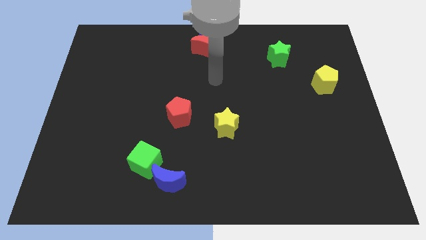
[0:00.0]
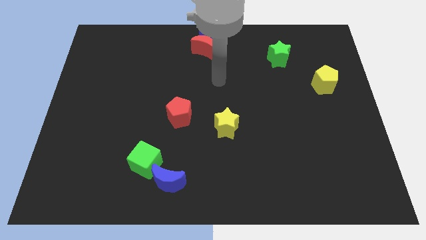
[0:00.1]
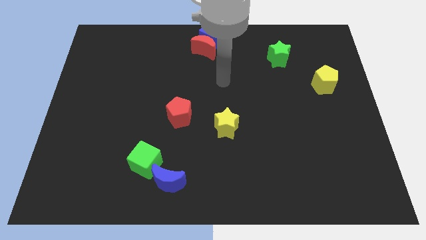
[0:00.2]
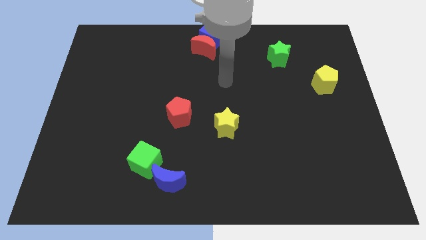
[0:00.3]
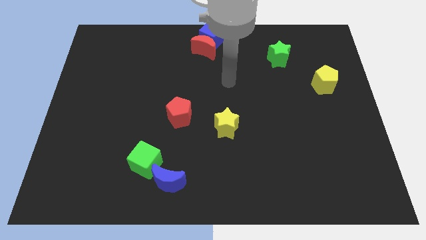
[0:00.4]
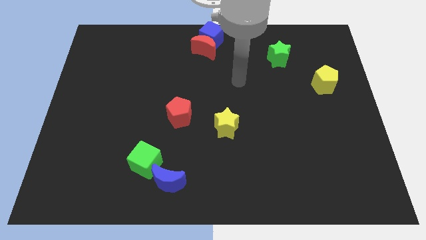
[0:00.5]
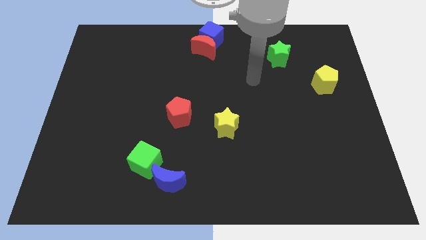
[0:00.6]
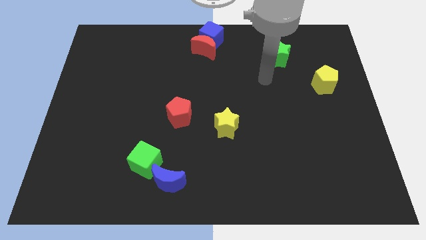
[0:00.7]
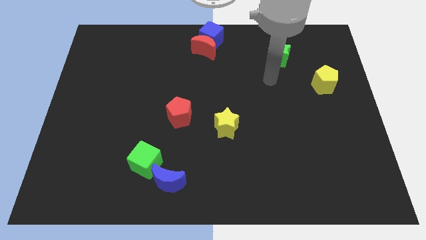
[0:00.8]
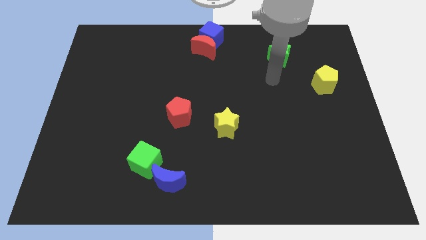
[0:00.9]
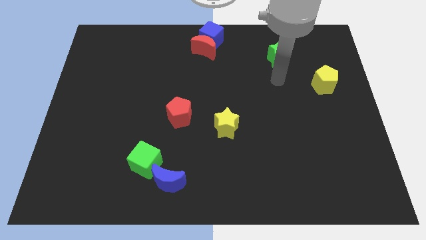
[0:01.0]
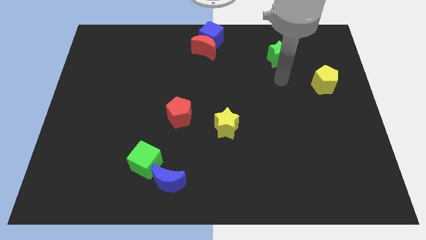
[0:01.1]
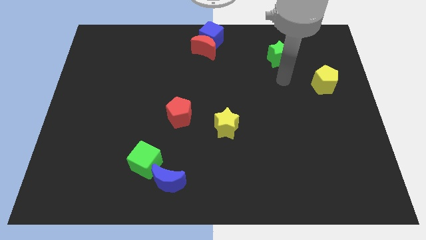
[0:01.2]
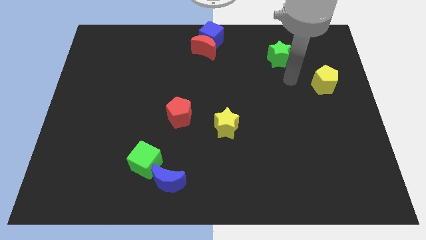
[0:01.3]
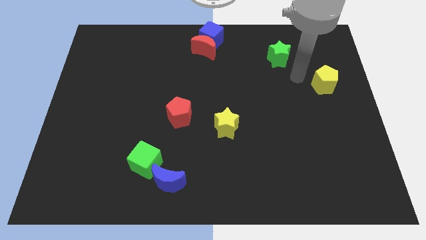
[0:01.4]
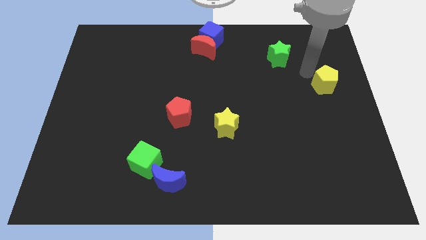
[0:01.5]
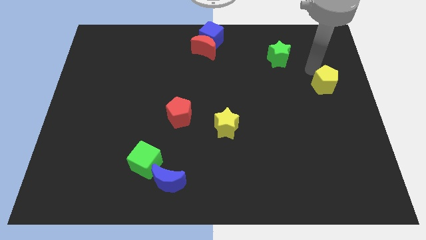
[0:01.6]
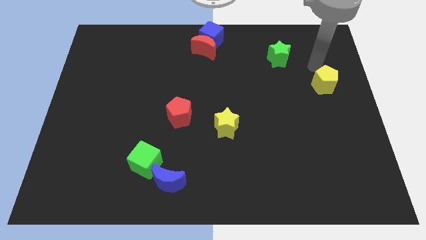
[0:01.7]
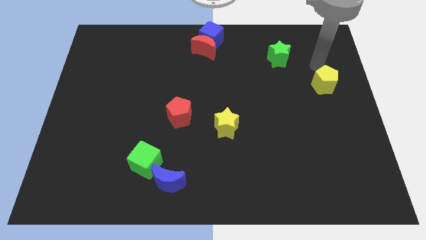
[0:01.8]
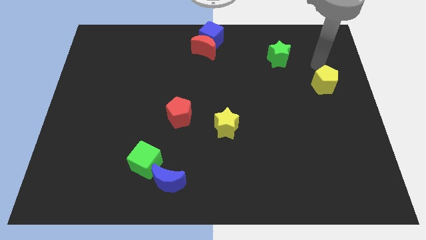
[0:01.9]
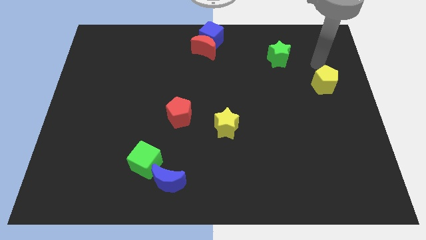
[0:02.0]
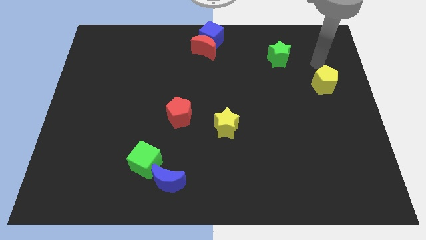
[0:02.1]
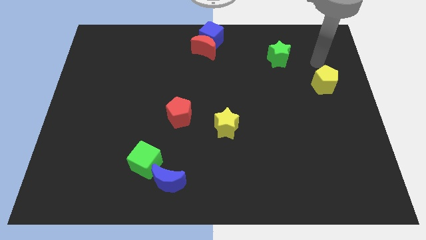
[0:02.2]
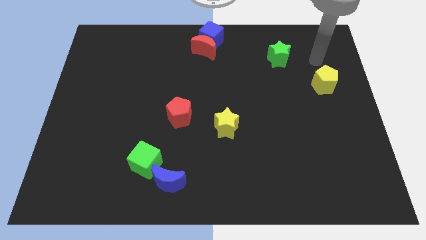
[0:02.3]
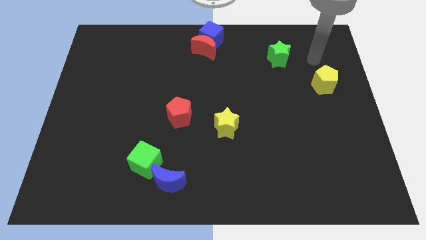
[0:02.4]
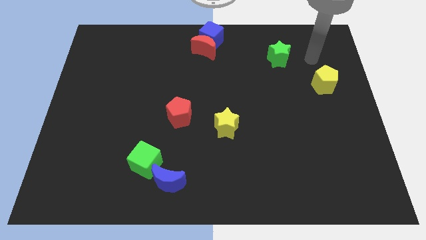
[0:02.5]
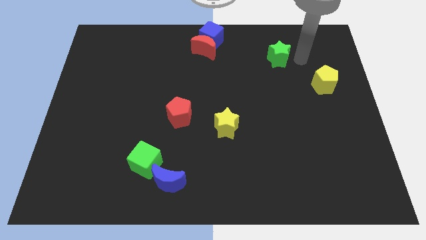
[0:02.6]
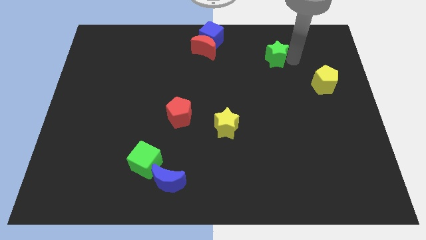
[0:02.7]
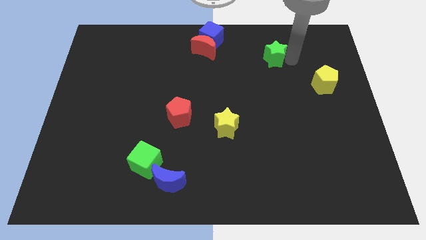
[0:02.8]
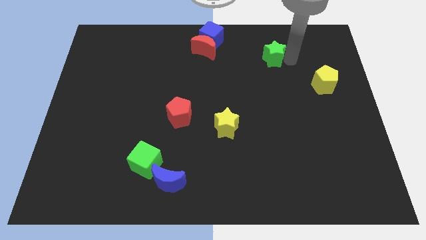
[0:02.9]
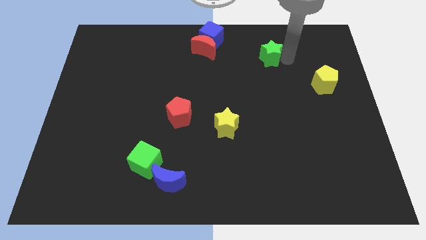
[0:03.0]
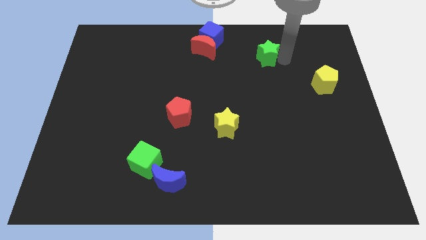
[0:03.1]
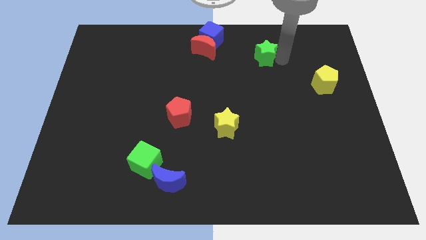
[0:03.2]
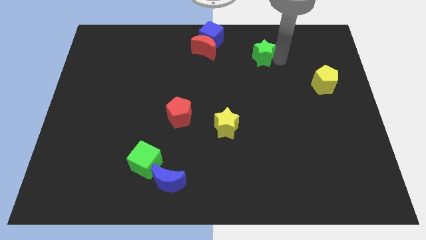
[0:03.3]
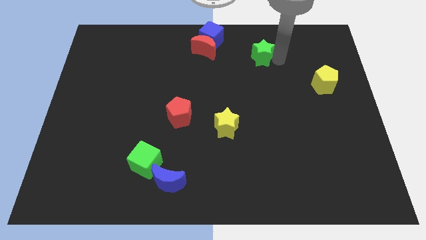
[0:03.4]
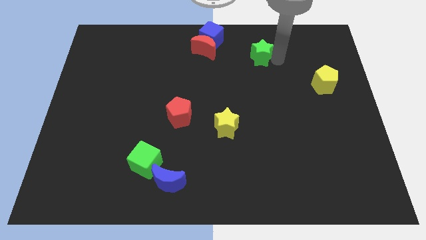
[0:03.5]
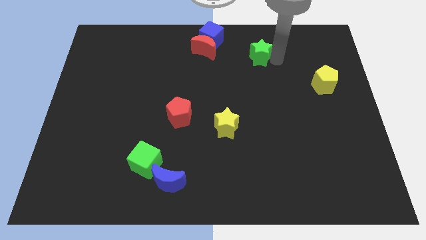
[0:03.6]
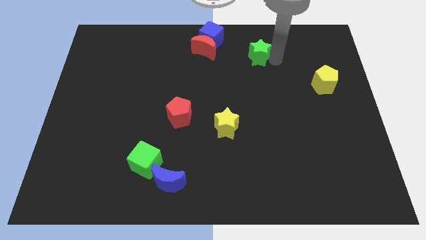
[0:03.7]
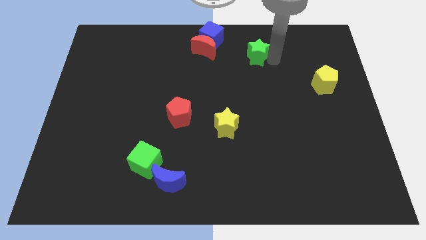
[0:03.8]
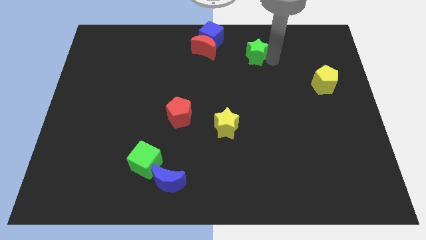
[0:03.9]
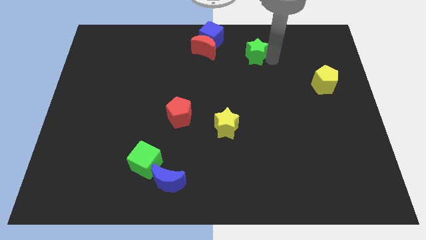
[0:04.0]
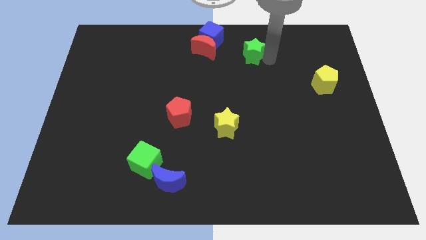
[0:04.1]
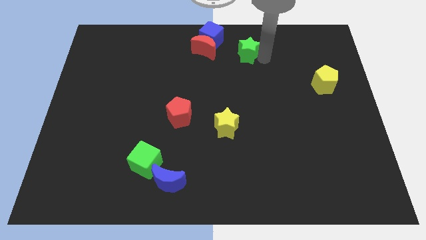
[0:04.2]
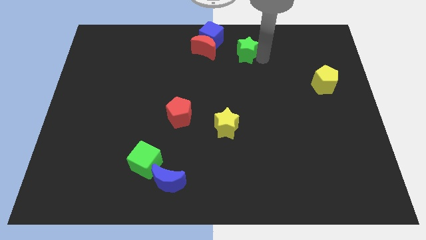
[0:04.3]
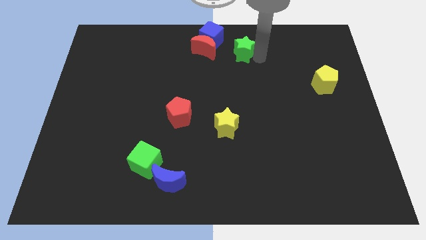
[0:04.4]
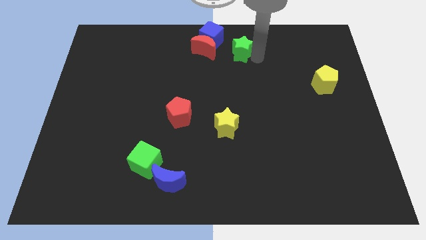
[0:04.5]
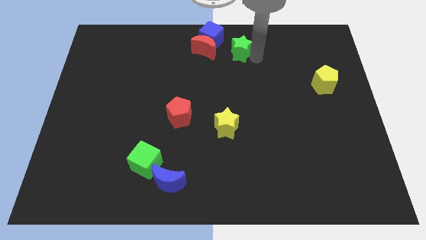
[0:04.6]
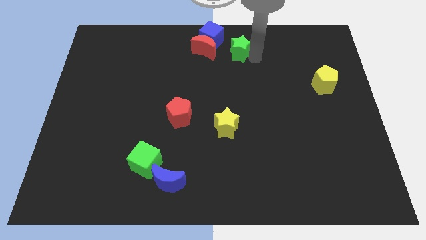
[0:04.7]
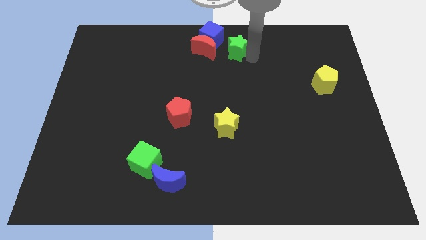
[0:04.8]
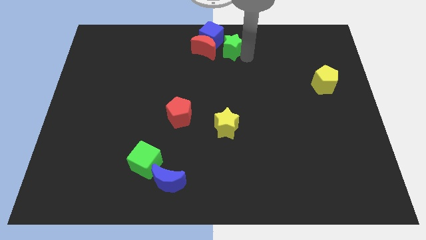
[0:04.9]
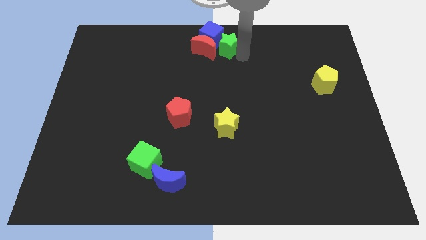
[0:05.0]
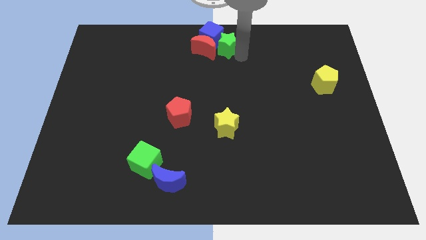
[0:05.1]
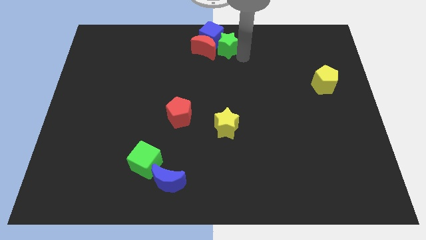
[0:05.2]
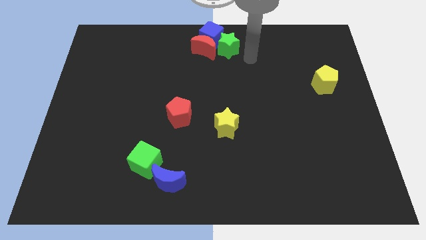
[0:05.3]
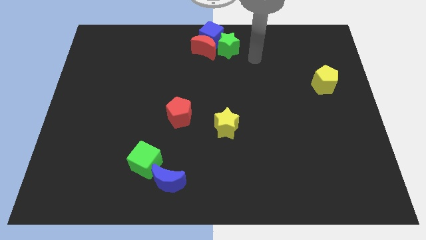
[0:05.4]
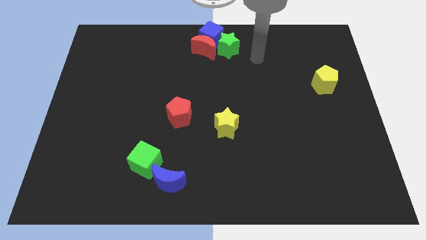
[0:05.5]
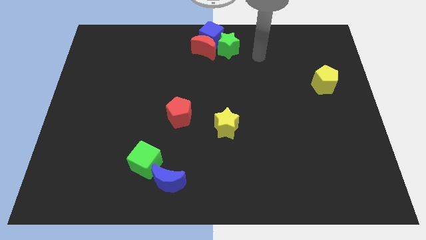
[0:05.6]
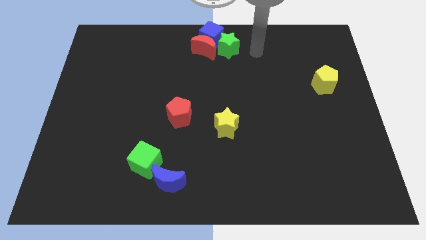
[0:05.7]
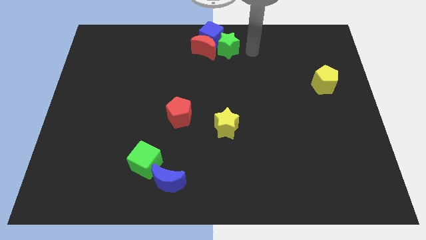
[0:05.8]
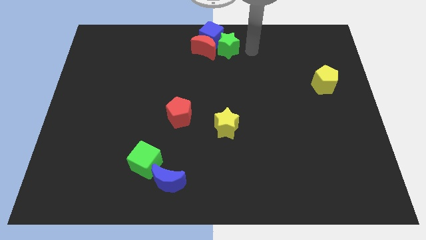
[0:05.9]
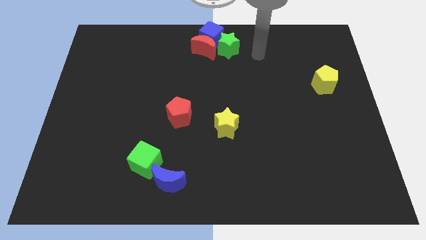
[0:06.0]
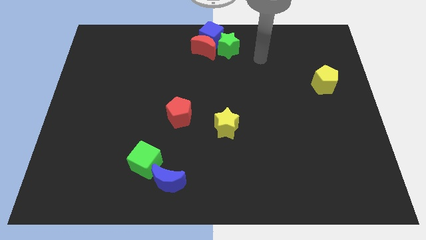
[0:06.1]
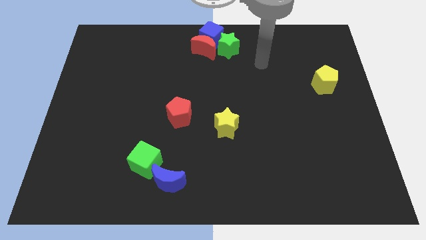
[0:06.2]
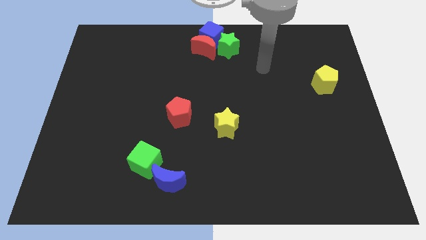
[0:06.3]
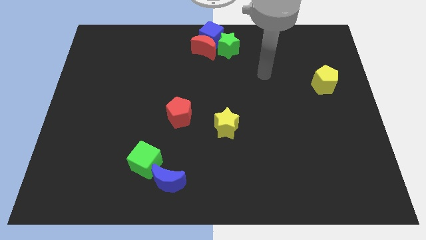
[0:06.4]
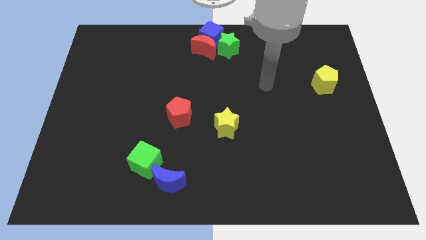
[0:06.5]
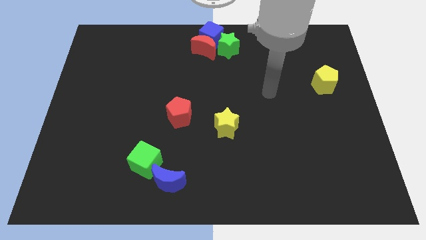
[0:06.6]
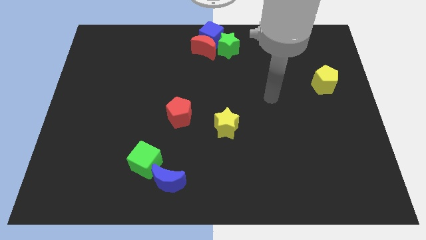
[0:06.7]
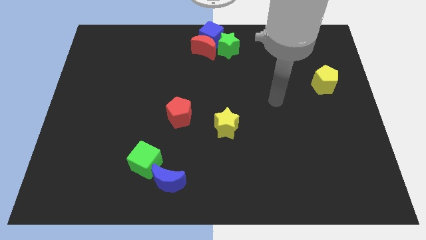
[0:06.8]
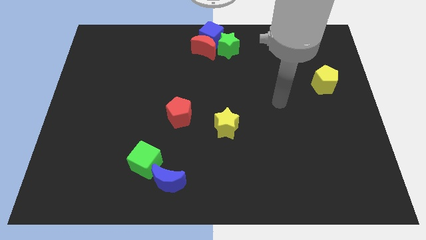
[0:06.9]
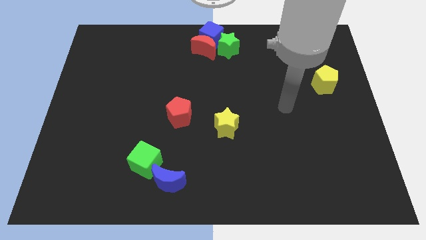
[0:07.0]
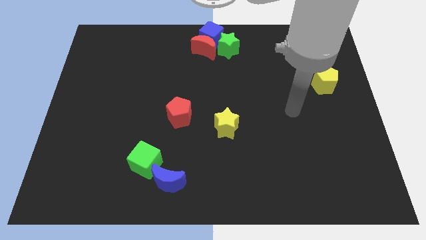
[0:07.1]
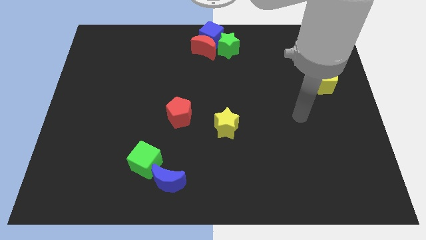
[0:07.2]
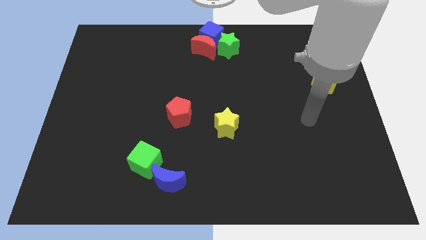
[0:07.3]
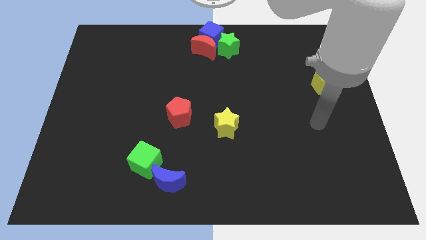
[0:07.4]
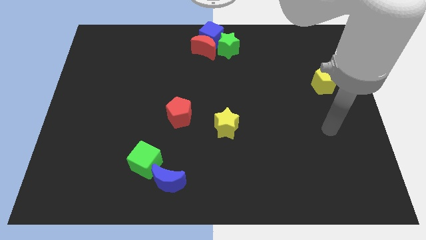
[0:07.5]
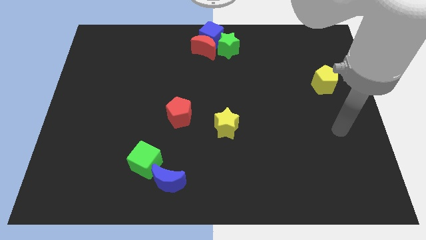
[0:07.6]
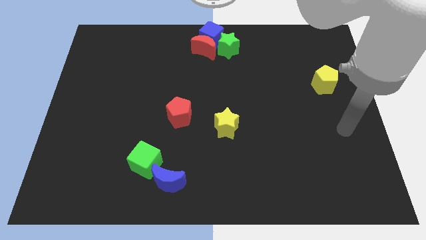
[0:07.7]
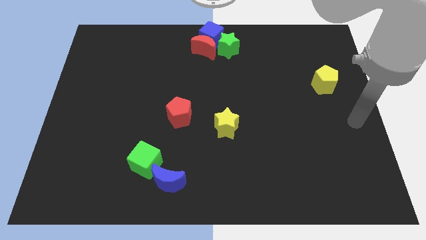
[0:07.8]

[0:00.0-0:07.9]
push the green into the blue cube

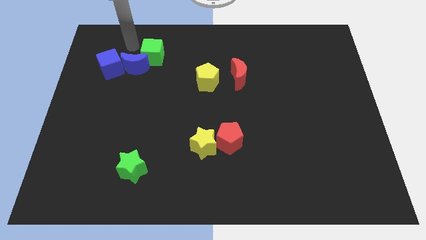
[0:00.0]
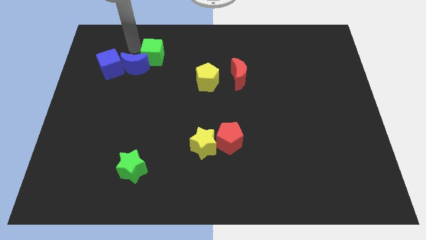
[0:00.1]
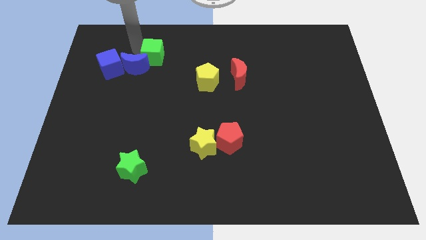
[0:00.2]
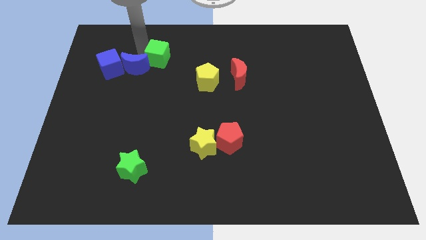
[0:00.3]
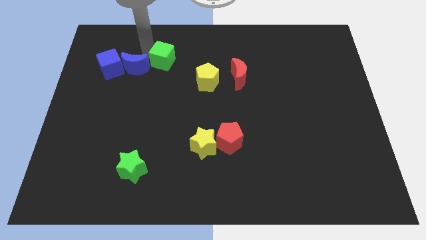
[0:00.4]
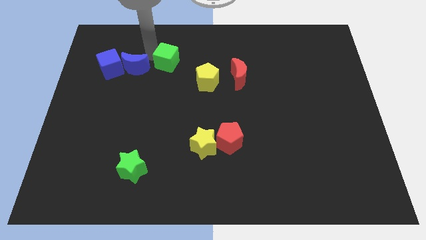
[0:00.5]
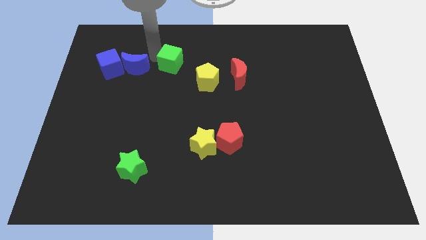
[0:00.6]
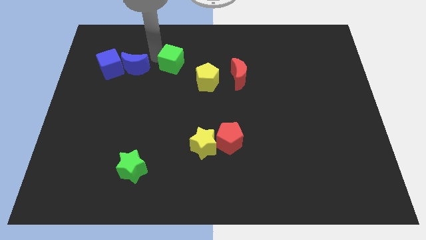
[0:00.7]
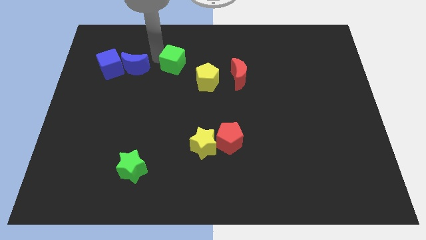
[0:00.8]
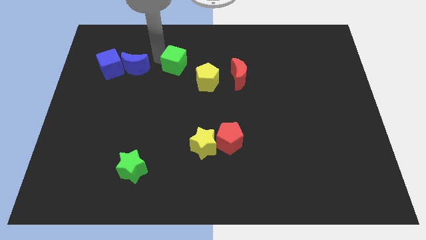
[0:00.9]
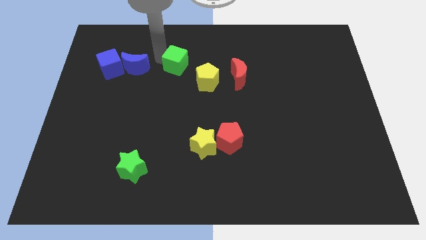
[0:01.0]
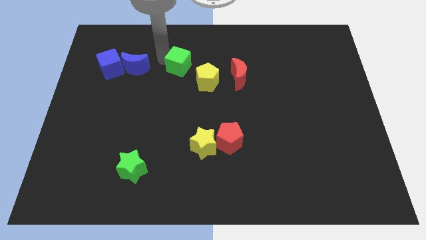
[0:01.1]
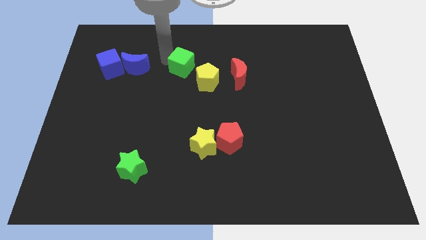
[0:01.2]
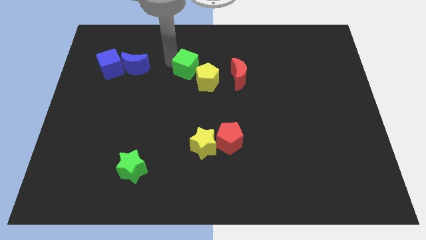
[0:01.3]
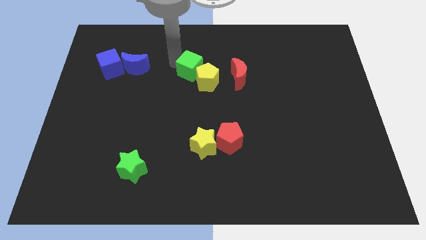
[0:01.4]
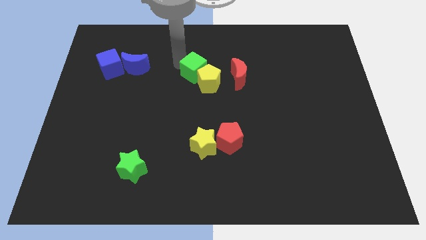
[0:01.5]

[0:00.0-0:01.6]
push the green cube slightly towards the yellow pentagon
